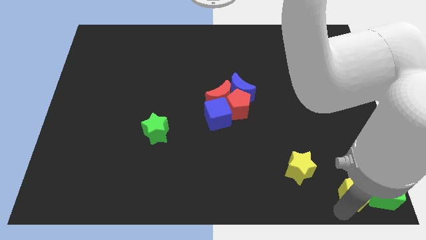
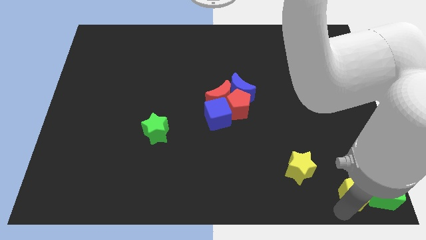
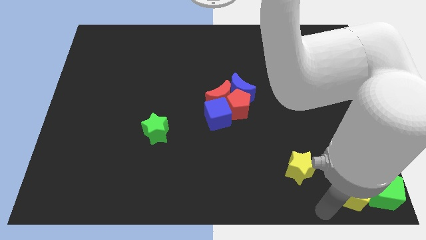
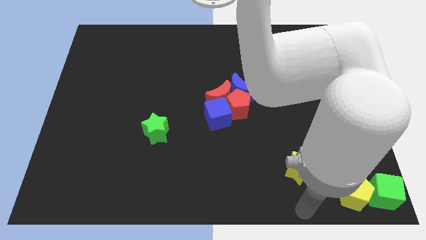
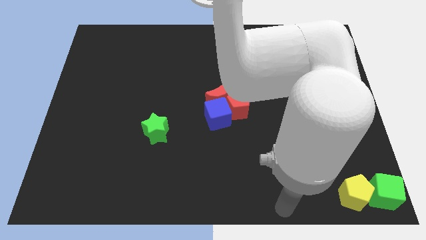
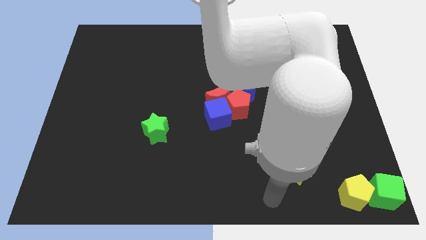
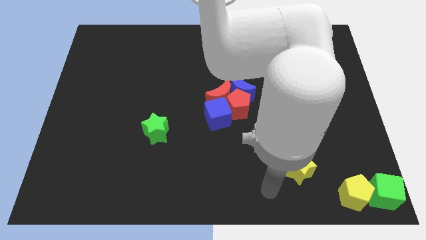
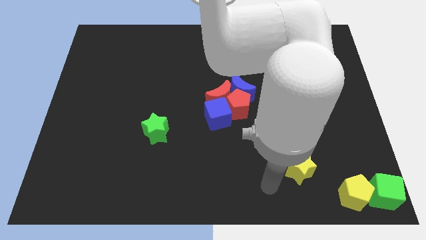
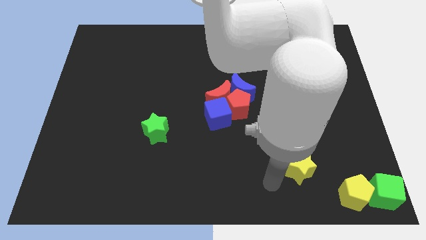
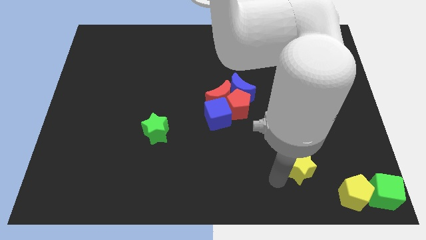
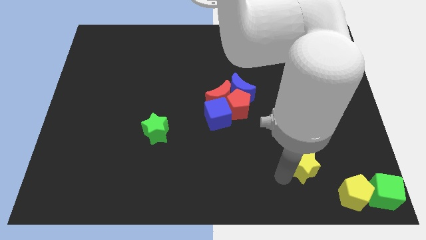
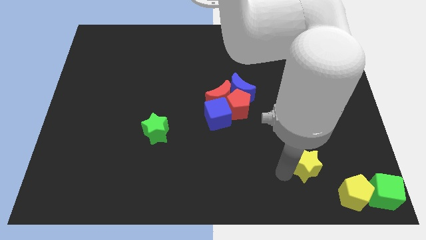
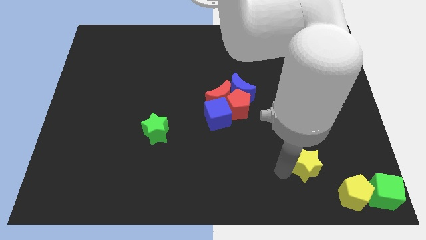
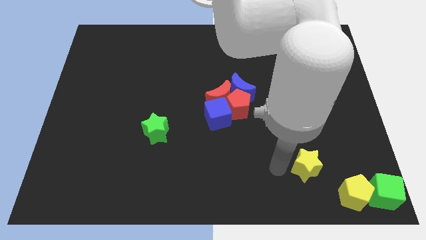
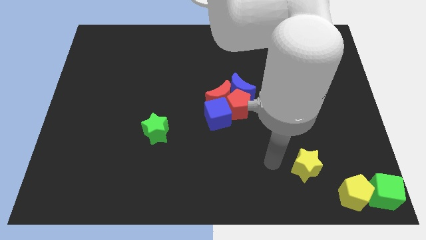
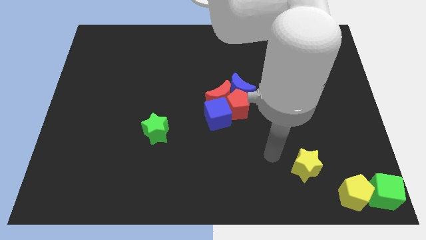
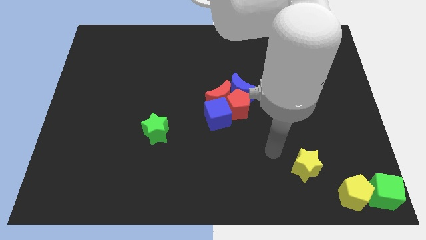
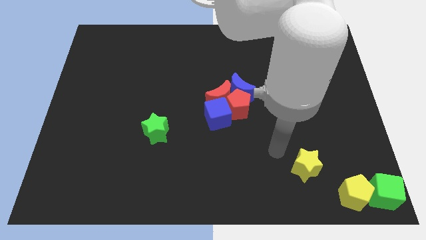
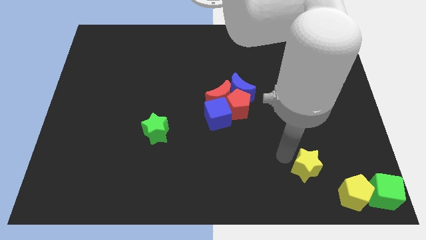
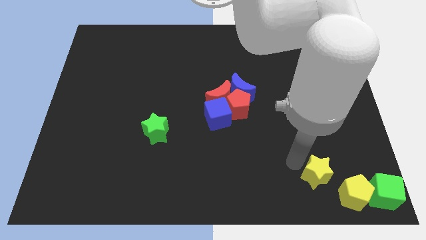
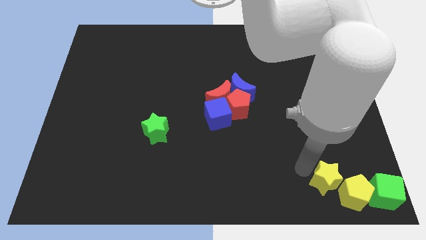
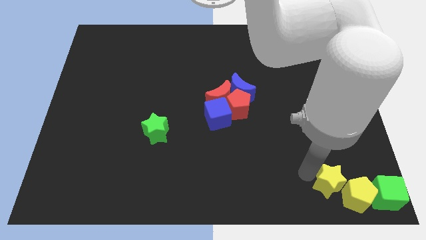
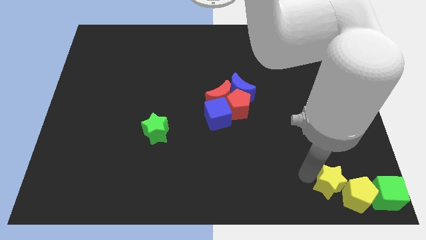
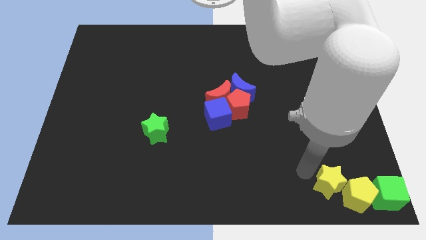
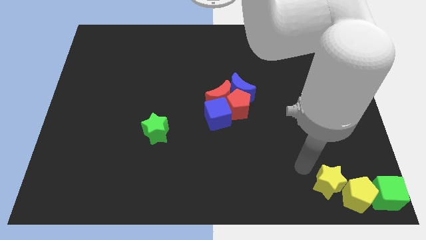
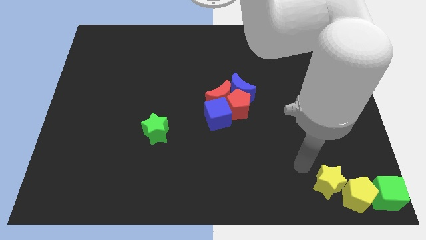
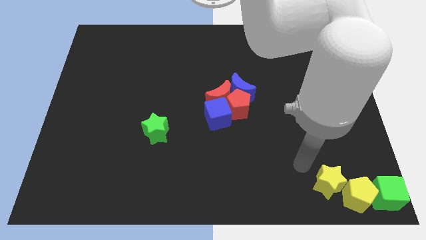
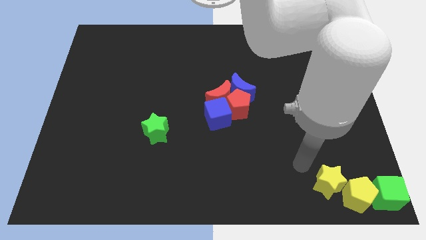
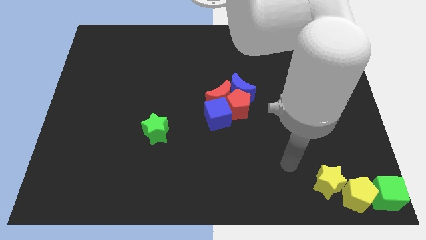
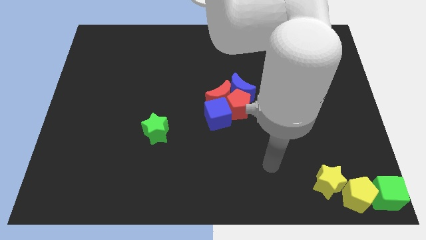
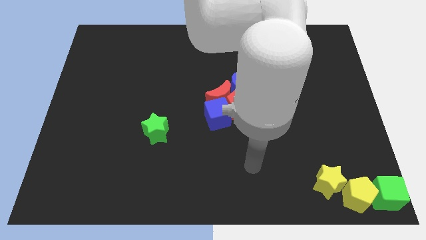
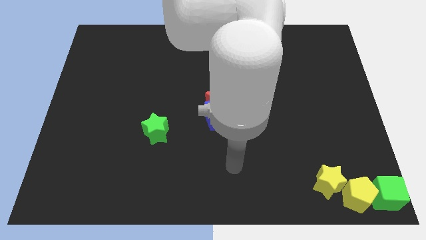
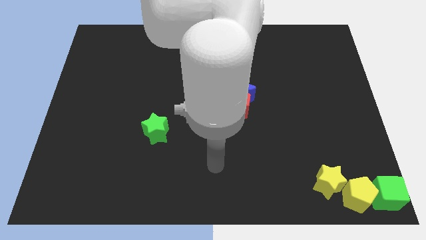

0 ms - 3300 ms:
push the yellow star into the yellow pentagon

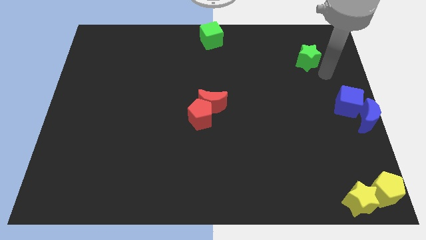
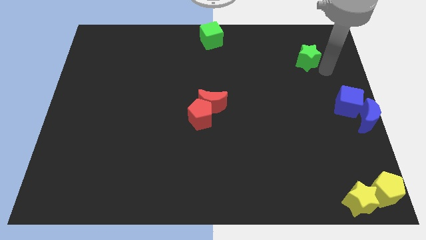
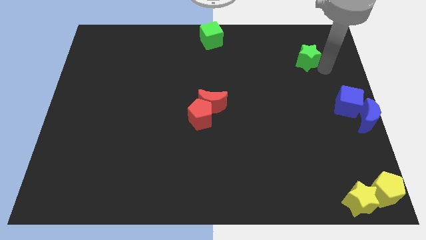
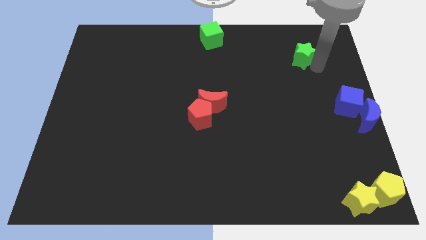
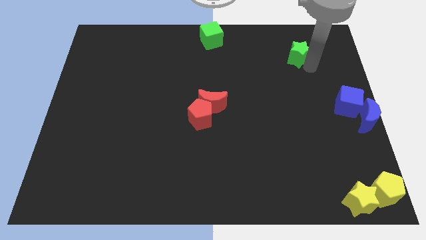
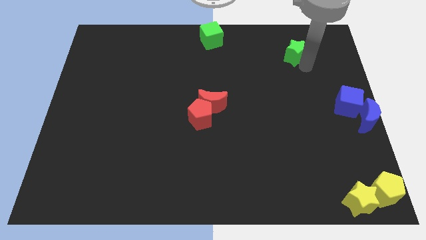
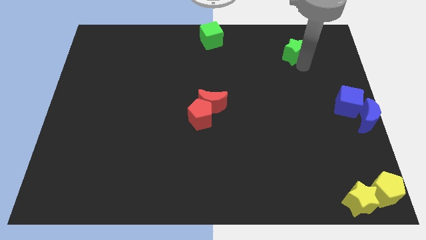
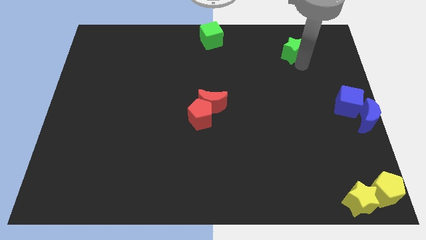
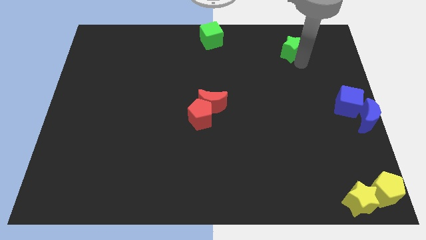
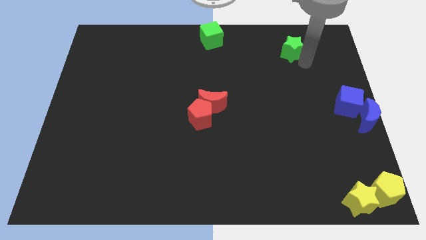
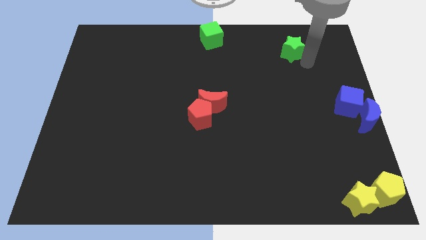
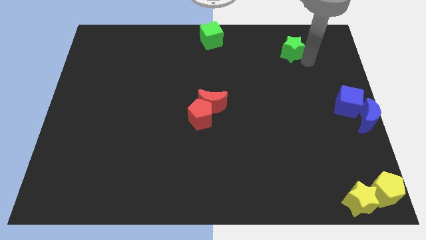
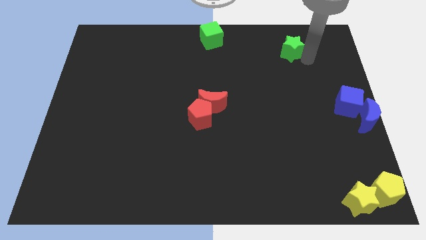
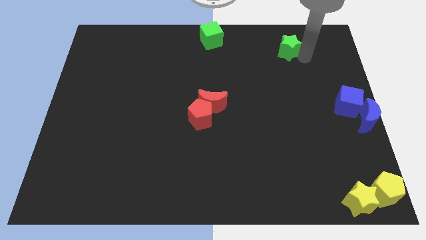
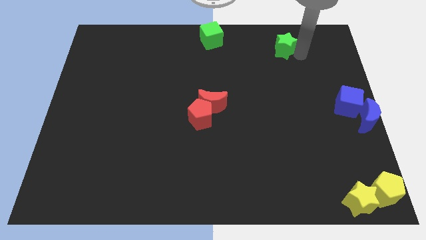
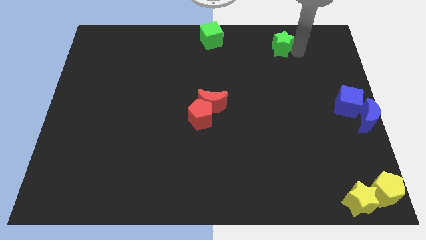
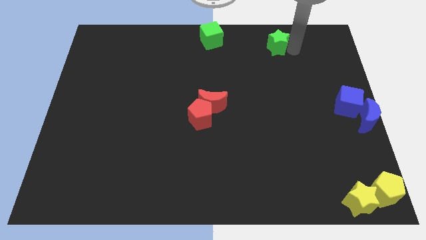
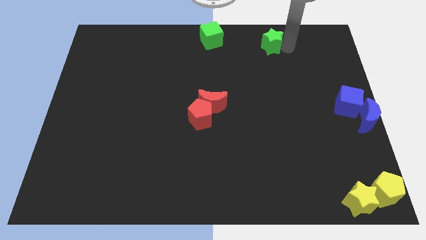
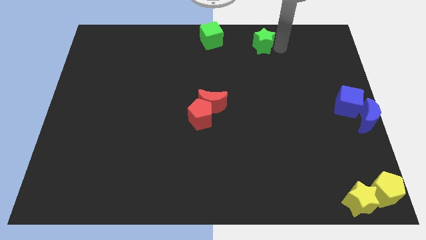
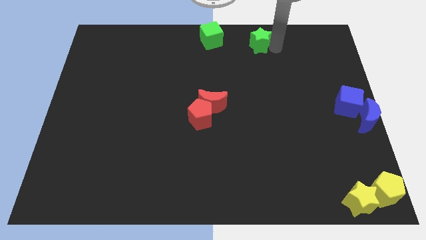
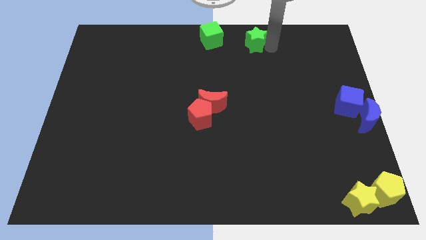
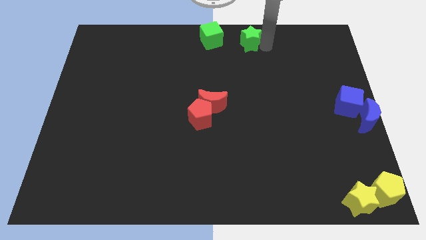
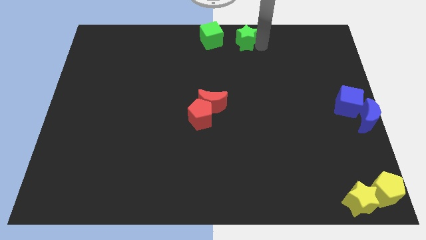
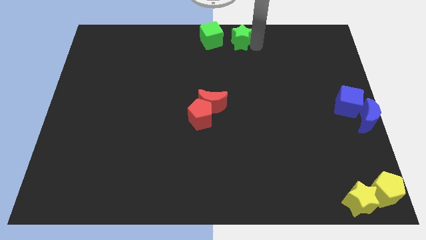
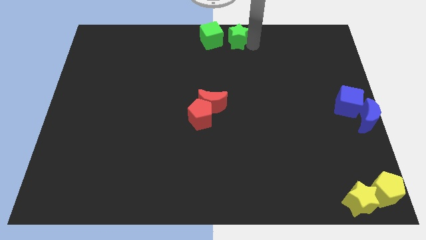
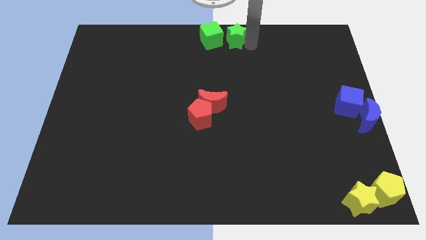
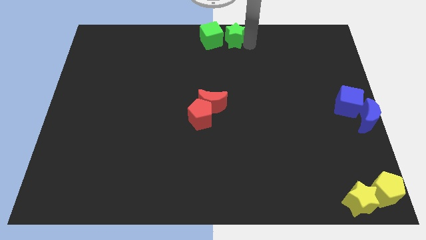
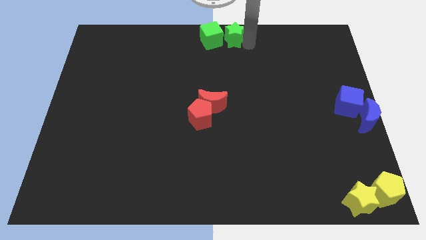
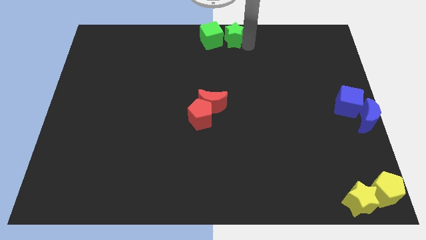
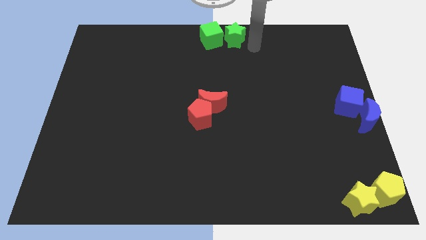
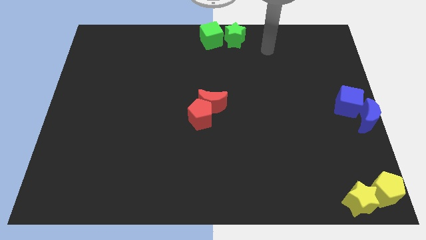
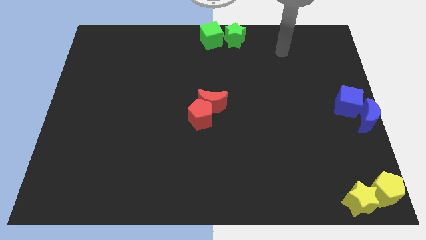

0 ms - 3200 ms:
place green star on the right of green cube

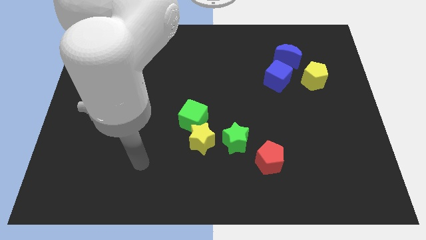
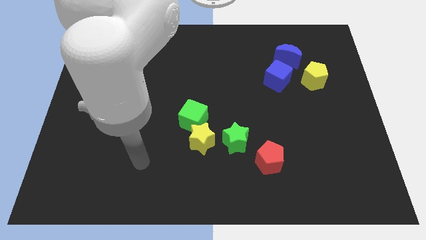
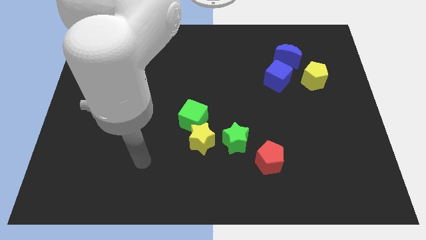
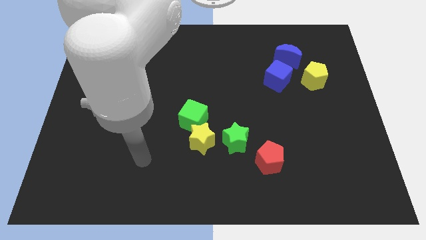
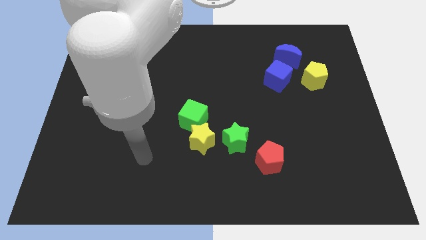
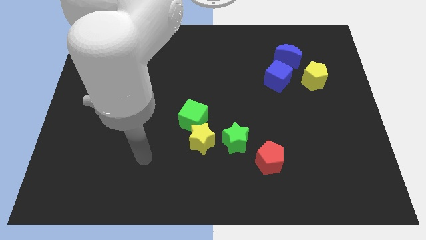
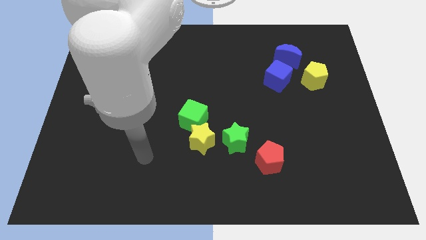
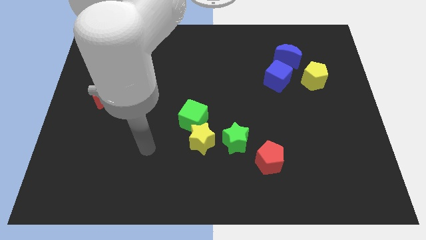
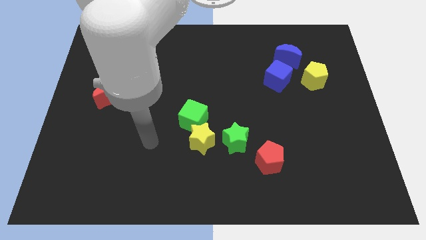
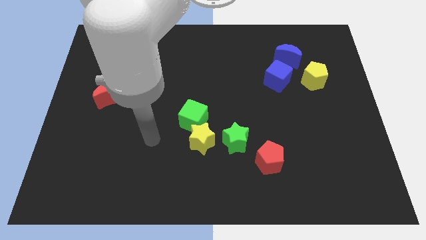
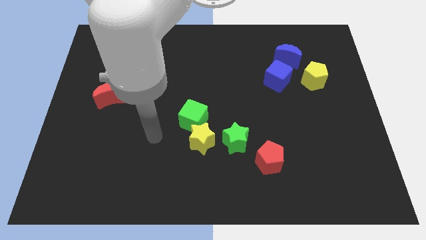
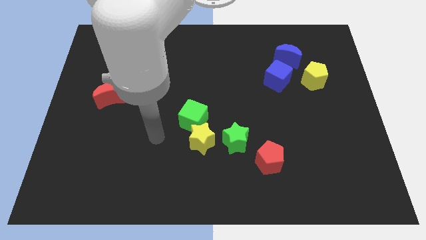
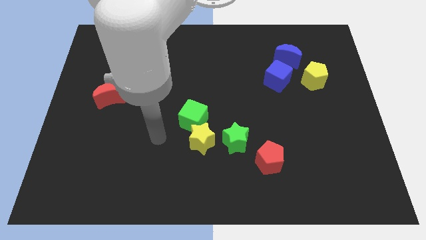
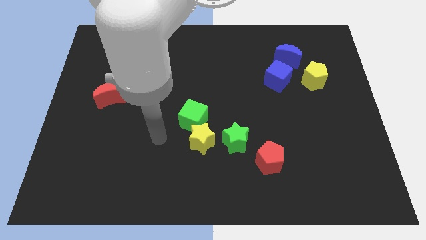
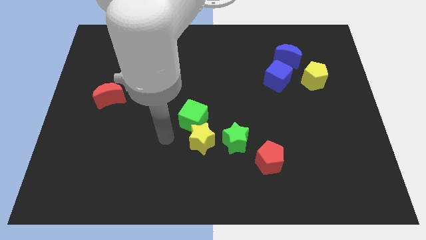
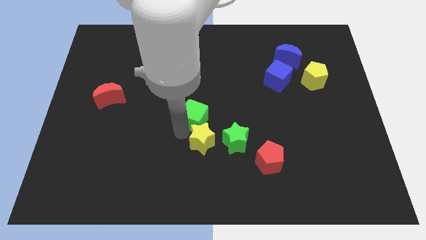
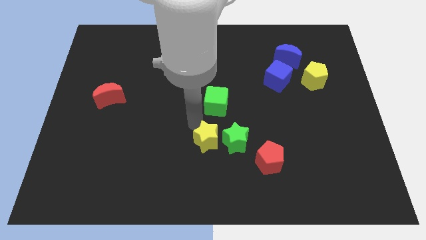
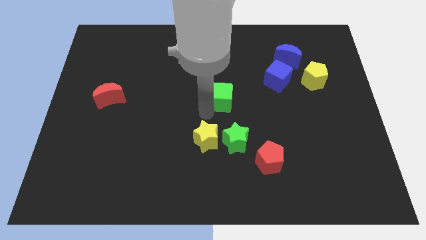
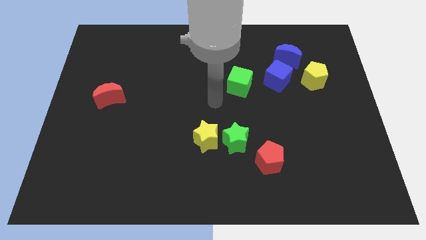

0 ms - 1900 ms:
separate the green cube from the yellow star

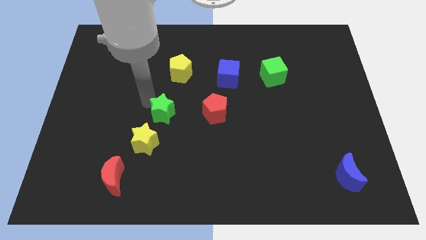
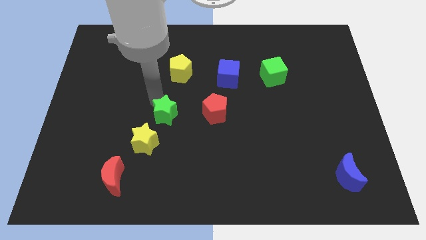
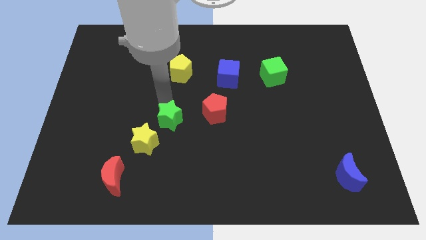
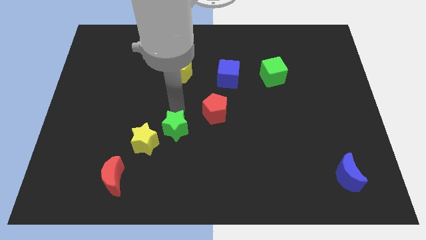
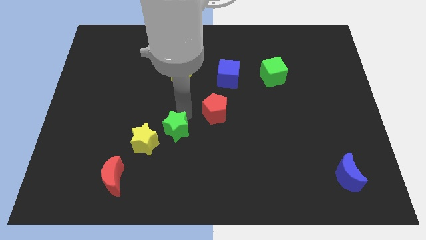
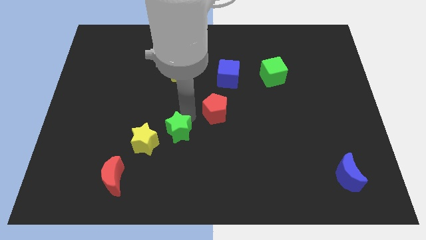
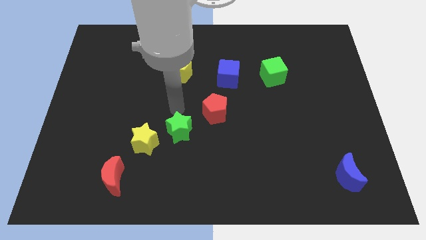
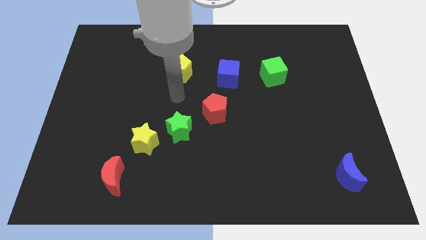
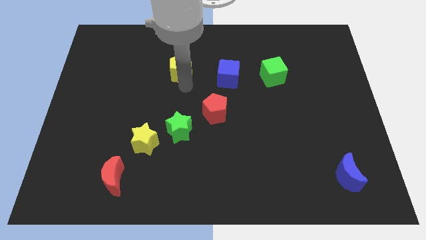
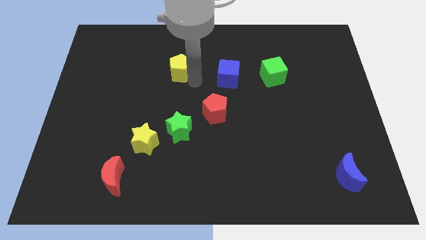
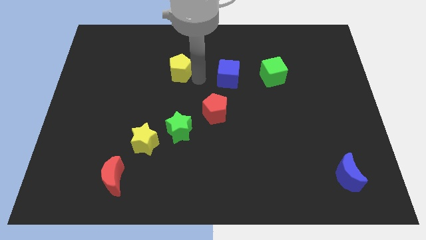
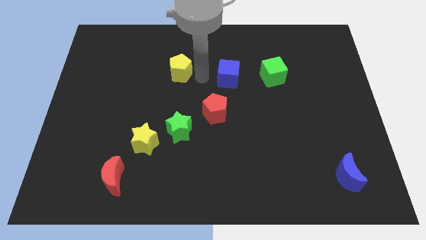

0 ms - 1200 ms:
move the green star in between the yellow star and red pentagon
